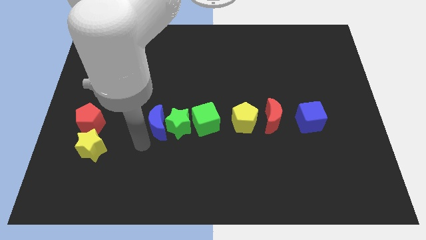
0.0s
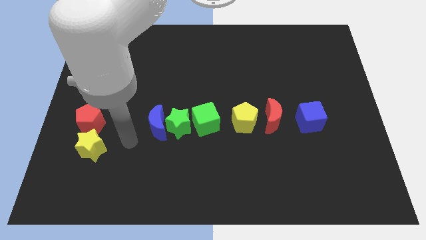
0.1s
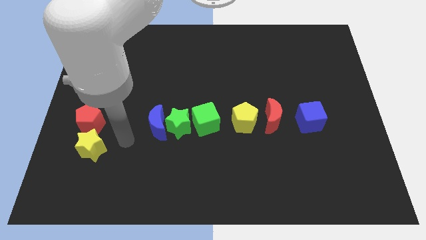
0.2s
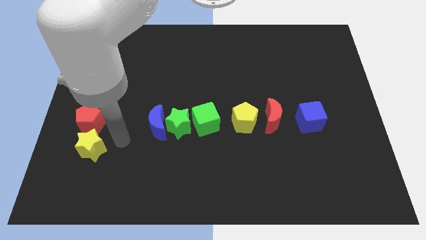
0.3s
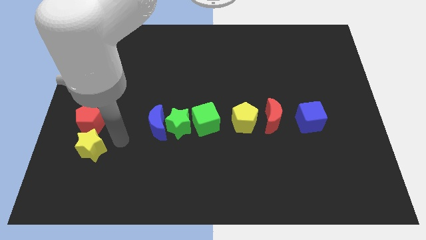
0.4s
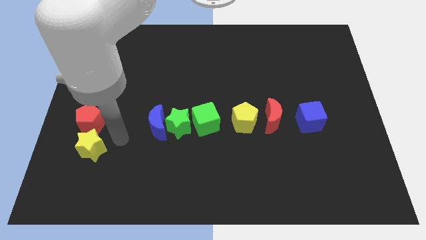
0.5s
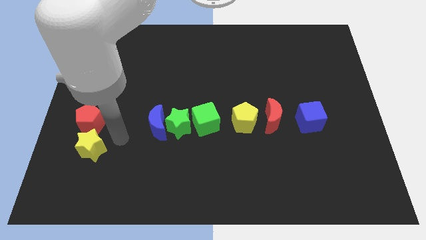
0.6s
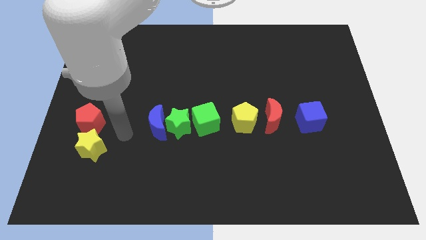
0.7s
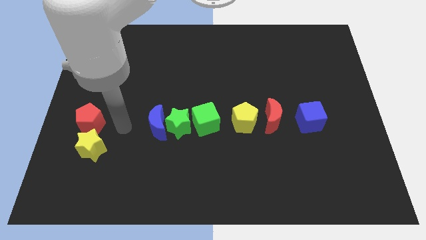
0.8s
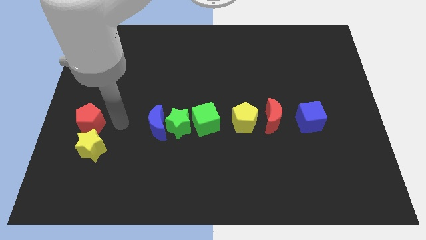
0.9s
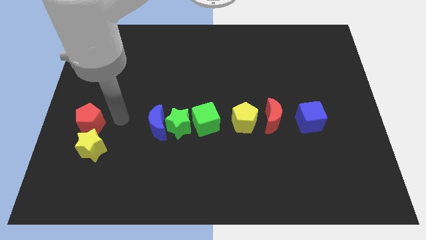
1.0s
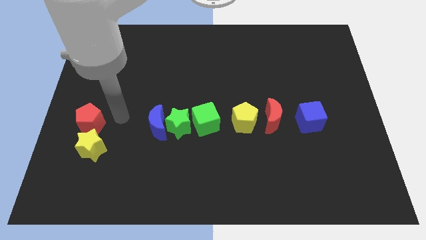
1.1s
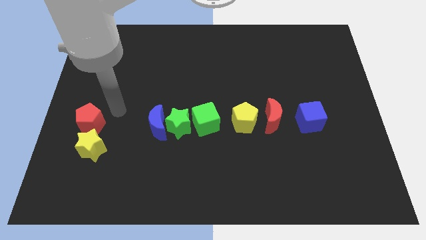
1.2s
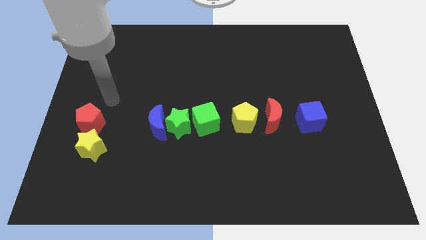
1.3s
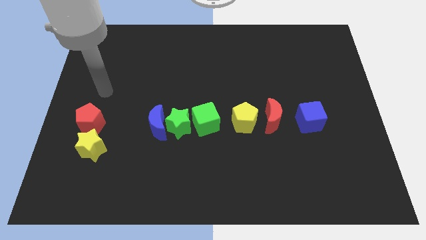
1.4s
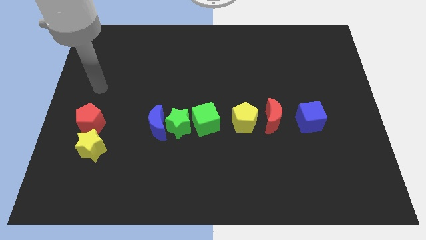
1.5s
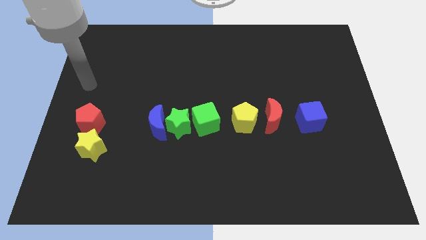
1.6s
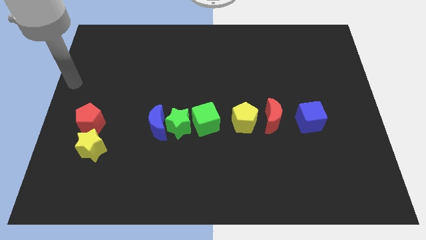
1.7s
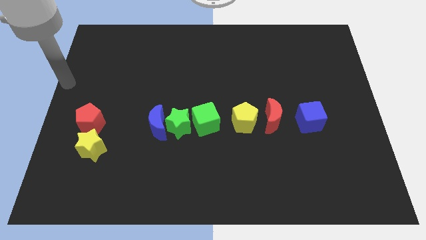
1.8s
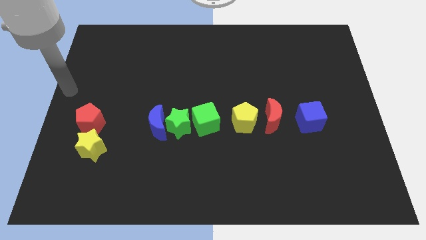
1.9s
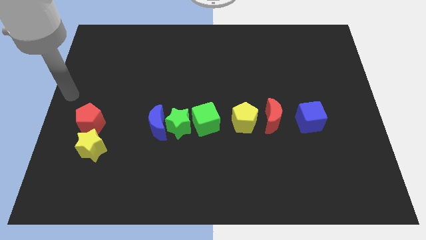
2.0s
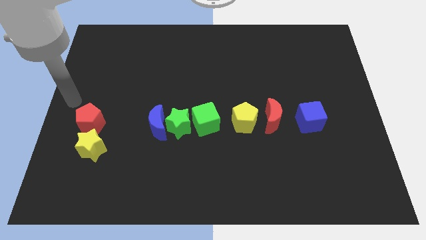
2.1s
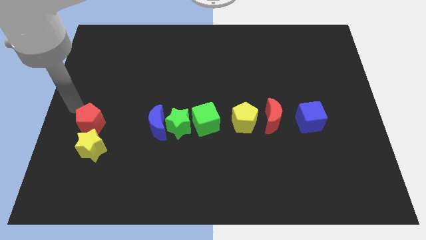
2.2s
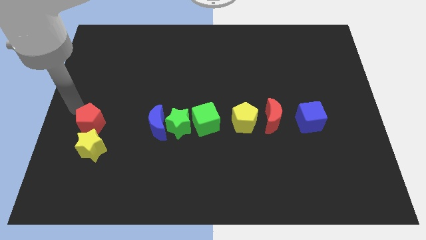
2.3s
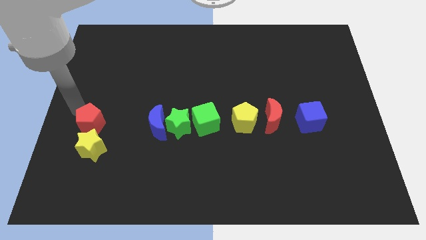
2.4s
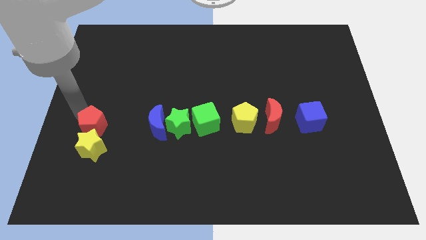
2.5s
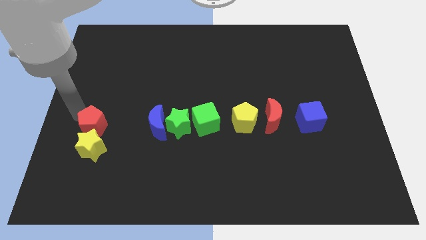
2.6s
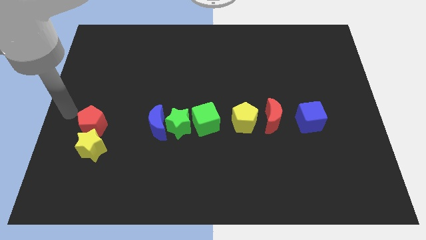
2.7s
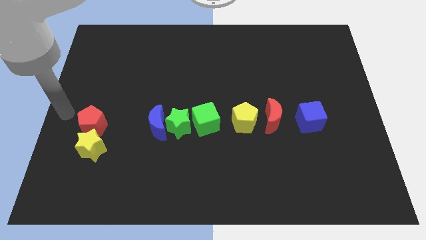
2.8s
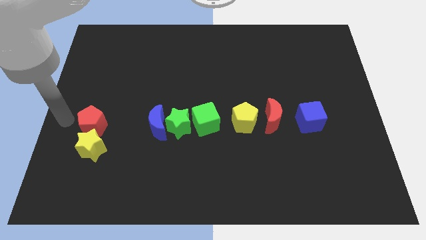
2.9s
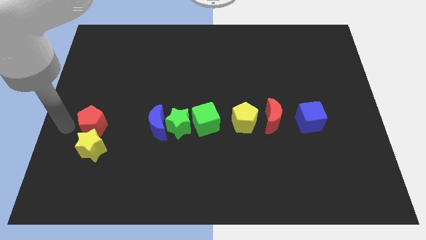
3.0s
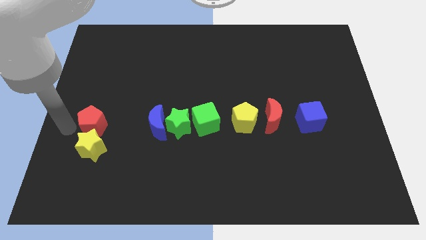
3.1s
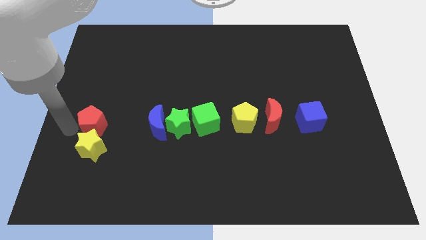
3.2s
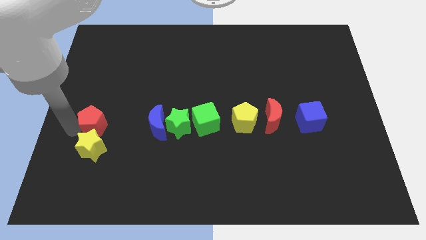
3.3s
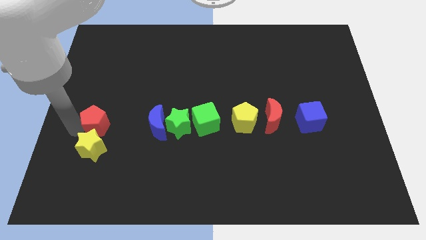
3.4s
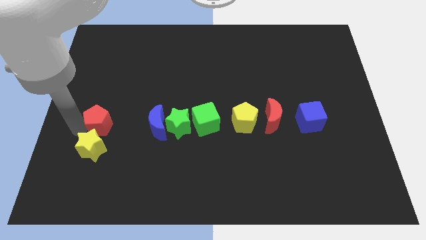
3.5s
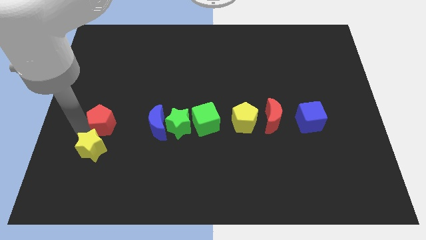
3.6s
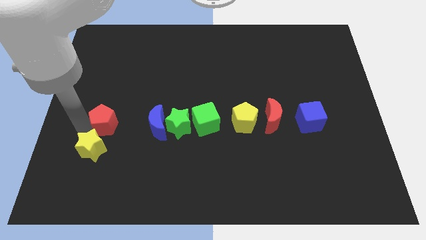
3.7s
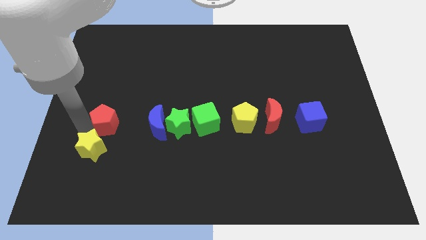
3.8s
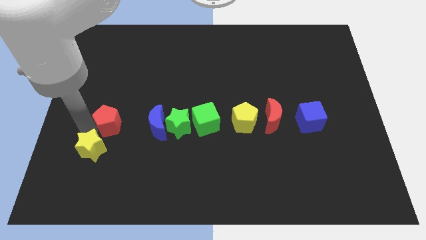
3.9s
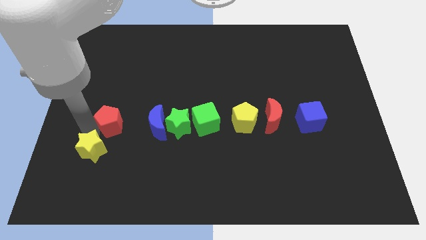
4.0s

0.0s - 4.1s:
push the red pentagon slightly to the right

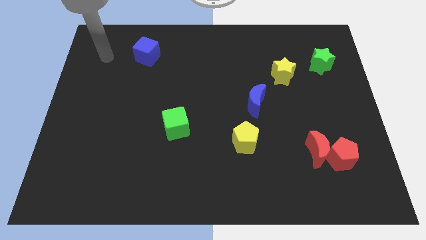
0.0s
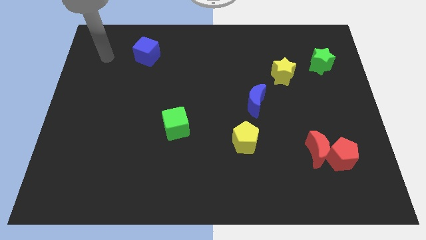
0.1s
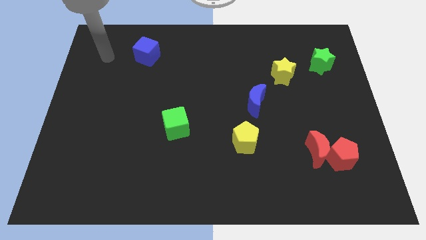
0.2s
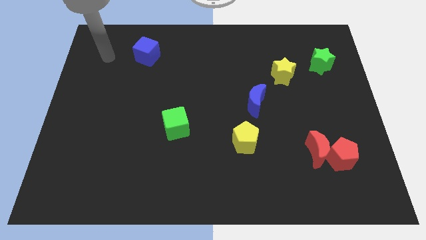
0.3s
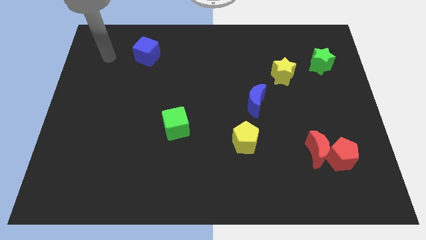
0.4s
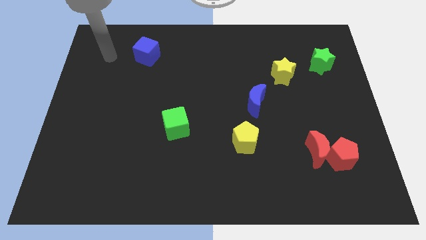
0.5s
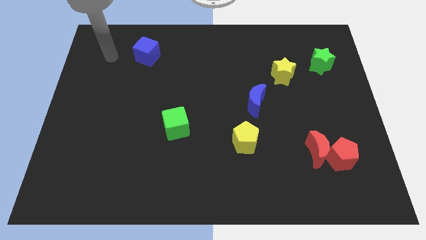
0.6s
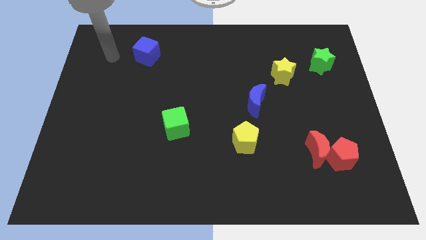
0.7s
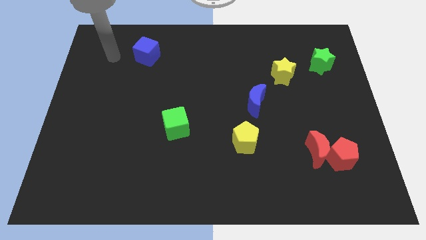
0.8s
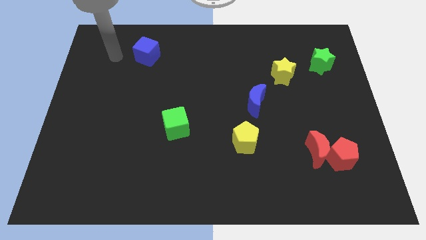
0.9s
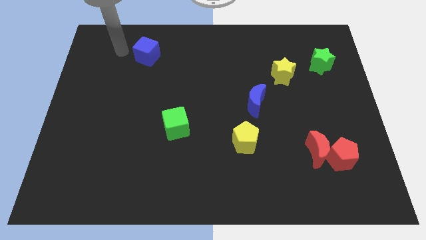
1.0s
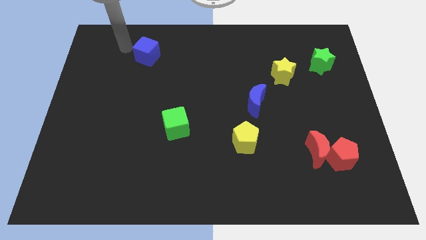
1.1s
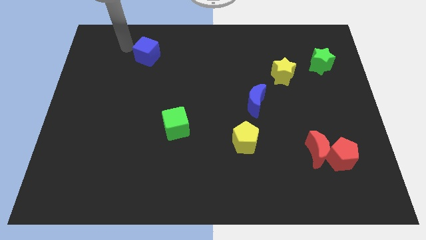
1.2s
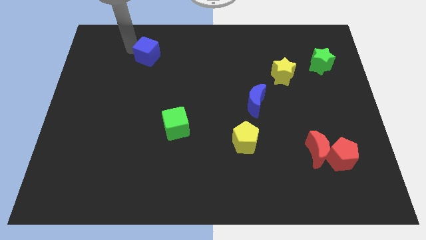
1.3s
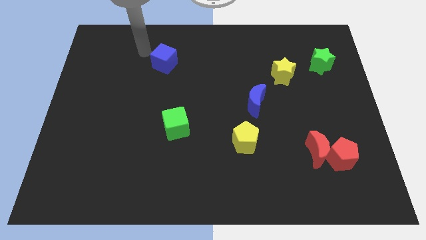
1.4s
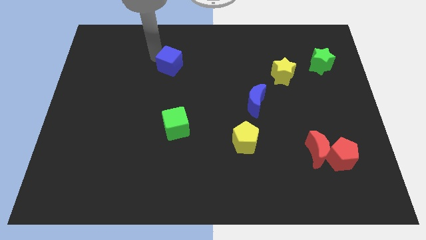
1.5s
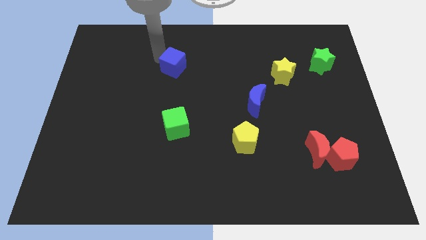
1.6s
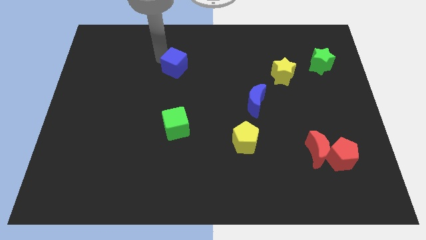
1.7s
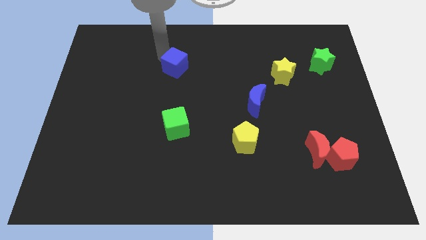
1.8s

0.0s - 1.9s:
move the blue cube vertically to the top side of the green cube

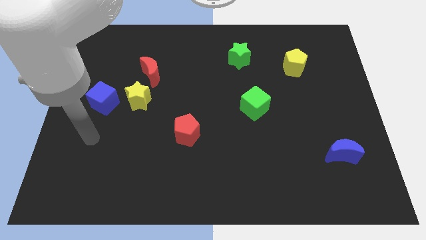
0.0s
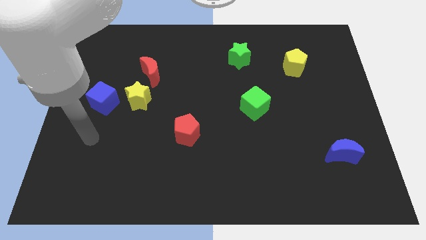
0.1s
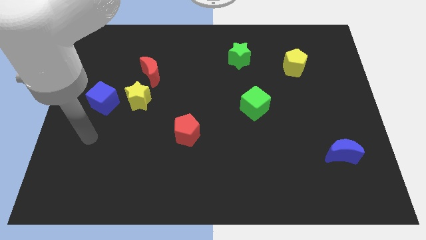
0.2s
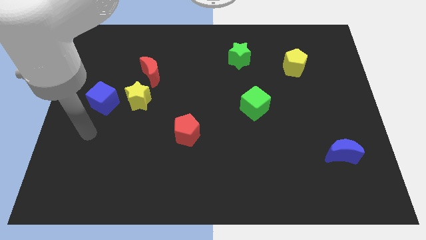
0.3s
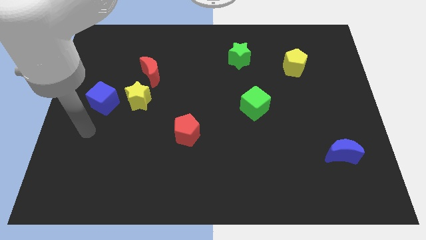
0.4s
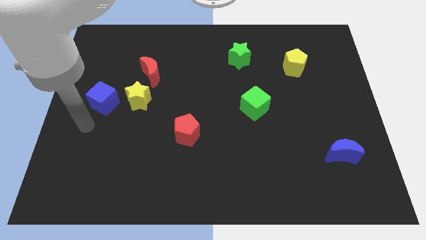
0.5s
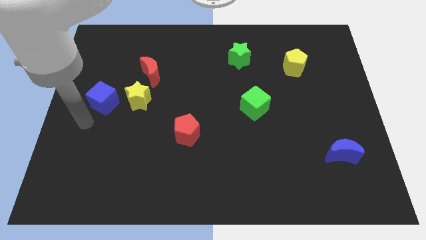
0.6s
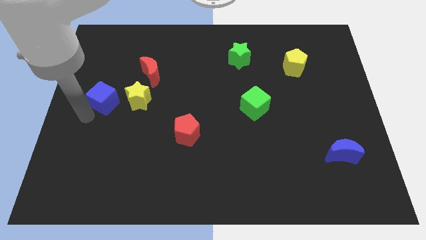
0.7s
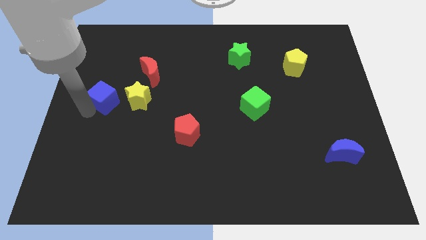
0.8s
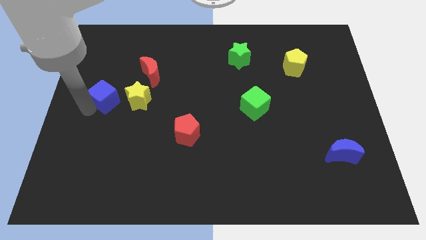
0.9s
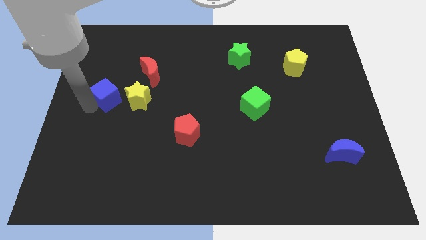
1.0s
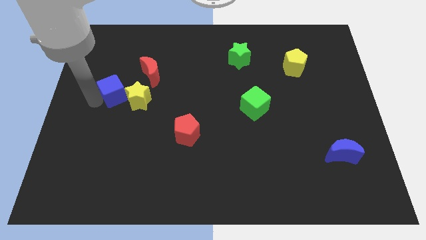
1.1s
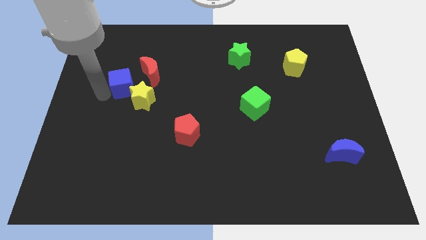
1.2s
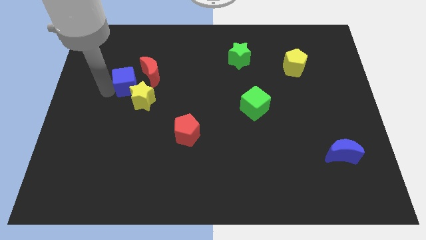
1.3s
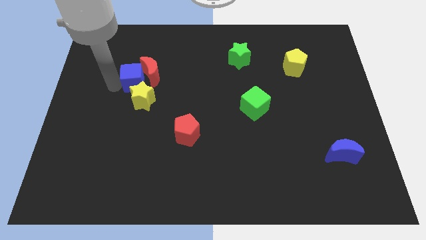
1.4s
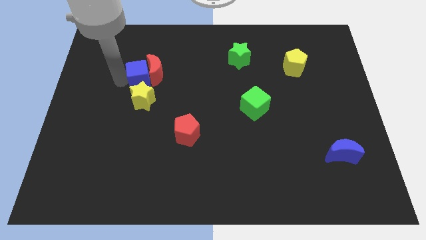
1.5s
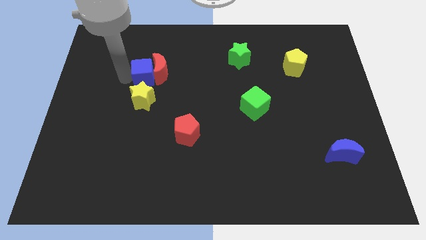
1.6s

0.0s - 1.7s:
push the blue cube into the red crescent

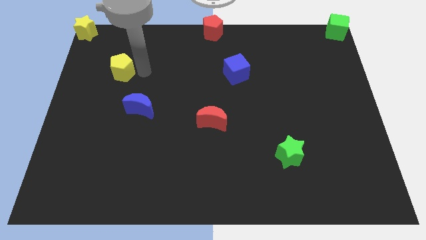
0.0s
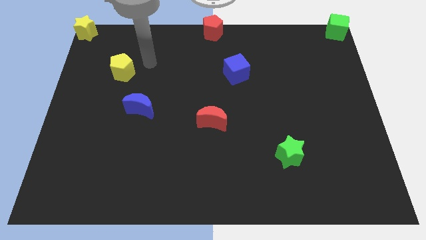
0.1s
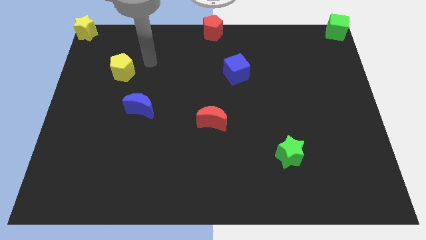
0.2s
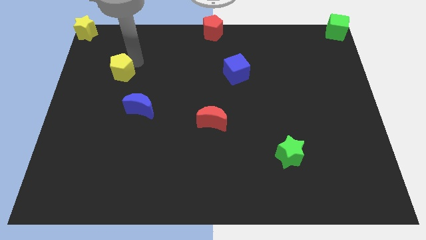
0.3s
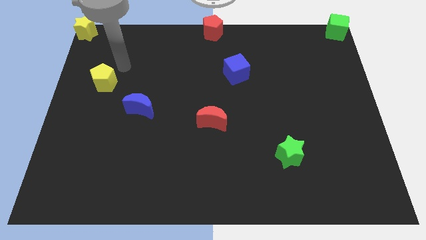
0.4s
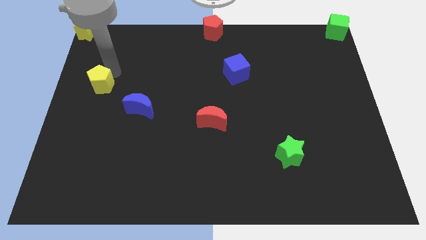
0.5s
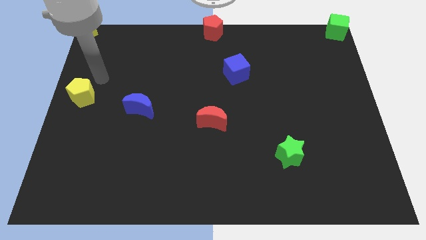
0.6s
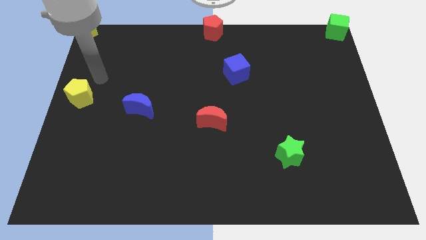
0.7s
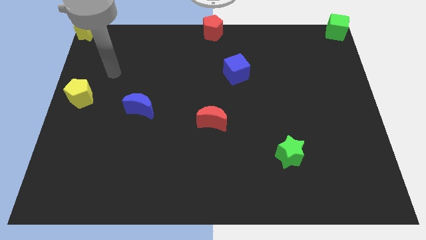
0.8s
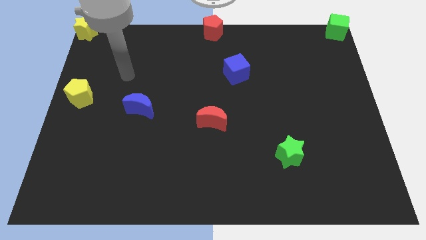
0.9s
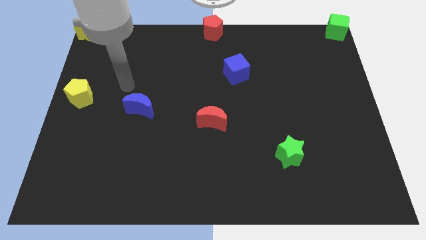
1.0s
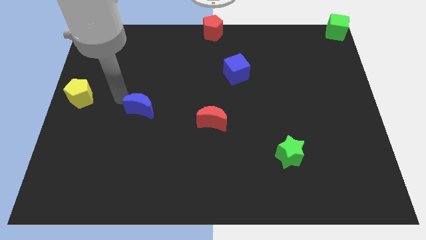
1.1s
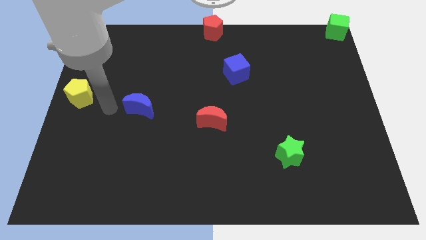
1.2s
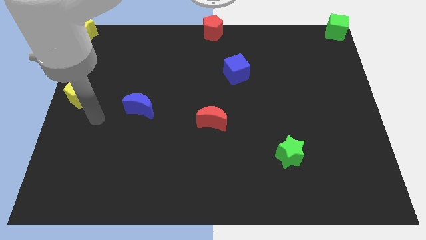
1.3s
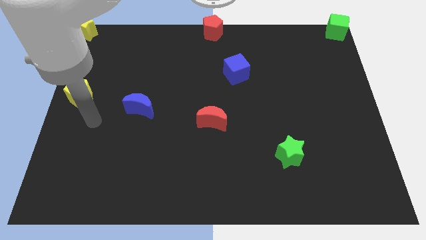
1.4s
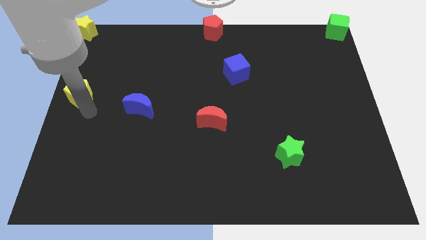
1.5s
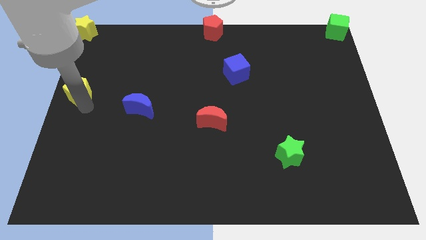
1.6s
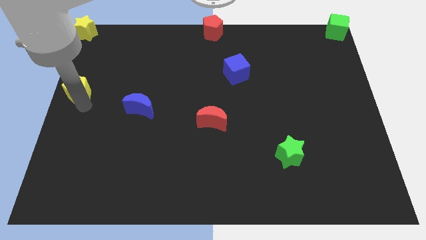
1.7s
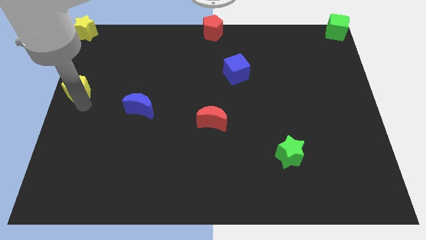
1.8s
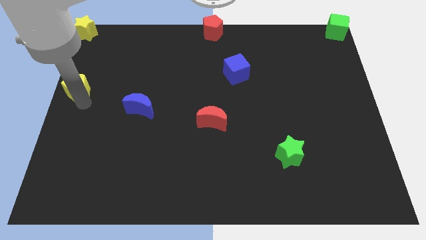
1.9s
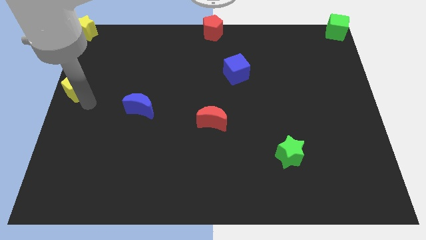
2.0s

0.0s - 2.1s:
place the yellow pentagon near to the center left side of the board
